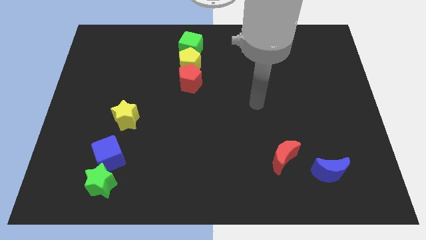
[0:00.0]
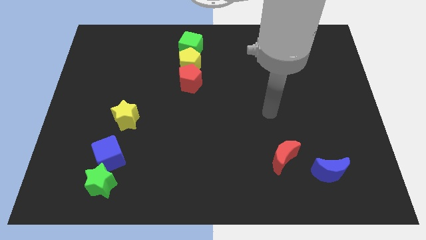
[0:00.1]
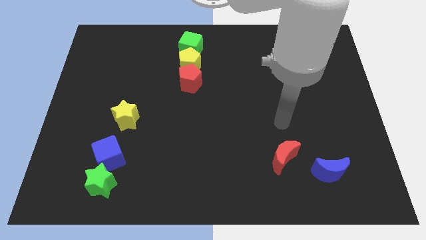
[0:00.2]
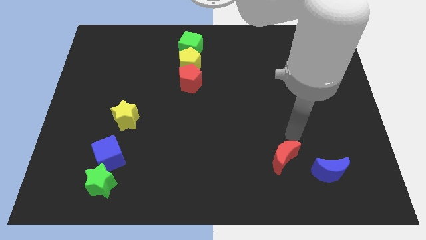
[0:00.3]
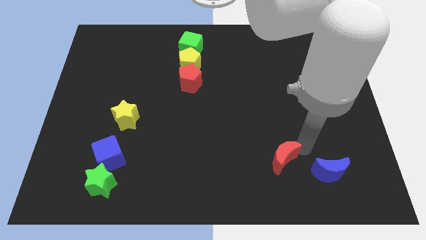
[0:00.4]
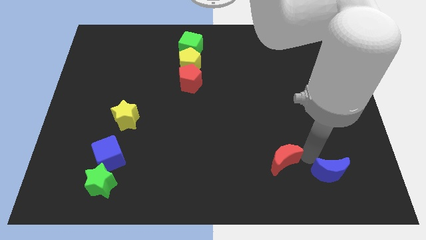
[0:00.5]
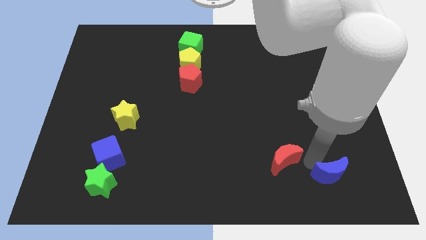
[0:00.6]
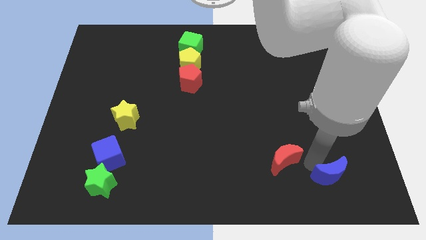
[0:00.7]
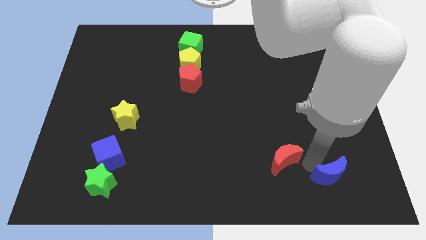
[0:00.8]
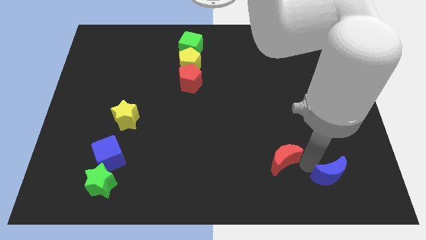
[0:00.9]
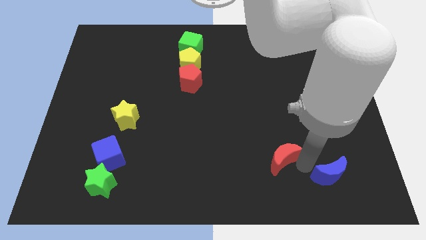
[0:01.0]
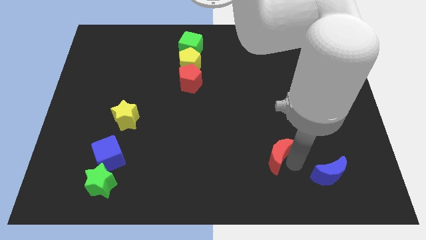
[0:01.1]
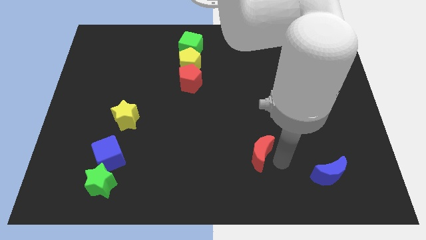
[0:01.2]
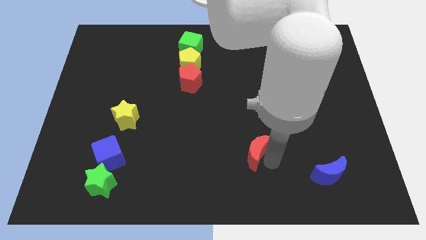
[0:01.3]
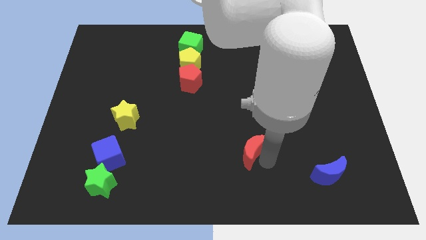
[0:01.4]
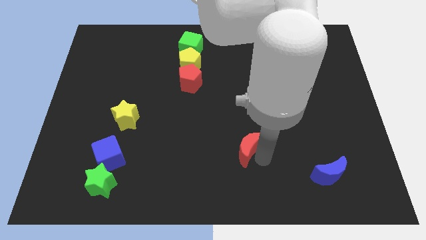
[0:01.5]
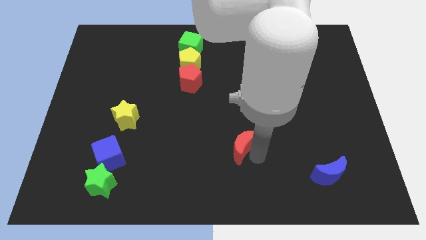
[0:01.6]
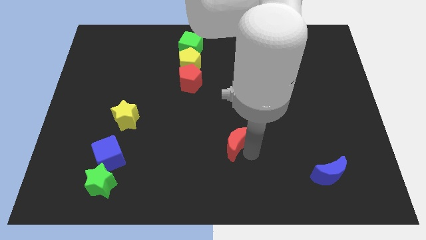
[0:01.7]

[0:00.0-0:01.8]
move red moon away from the blue moon

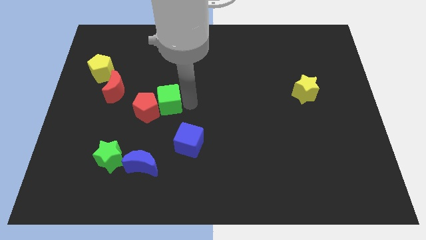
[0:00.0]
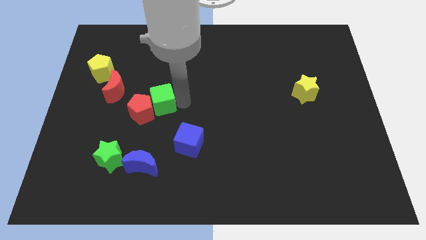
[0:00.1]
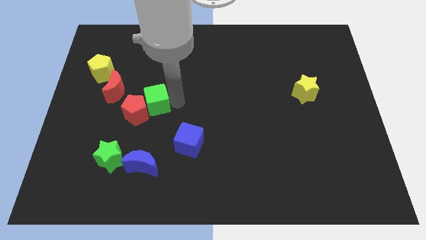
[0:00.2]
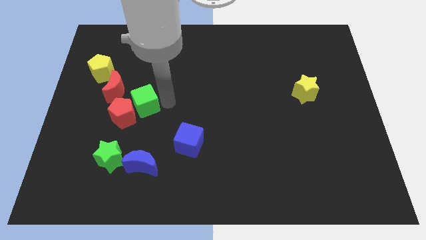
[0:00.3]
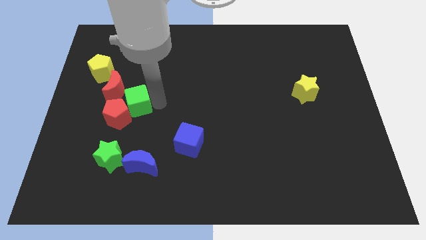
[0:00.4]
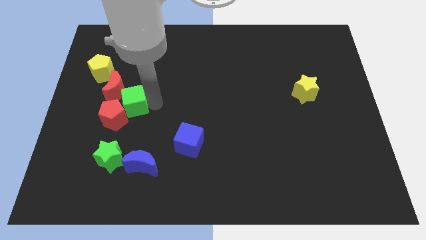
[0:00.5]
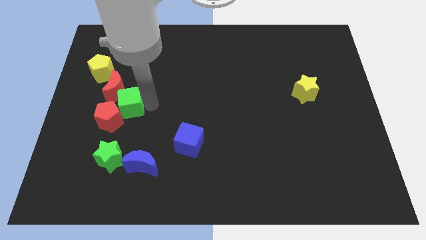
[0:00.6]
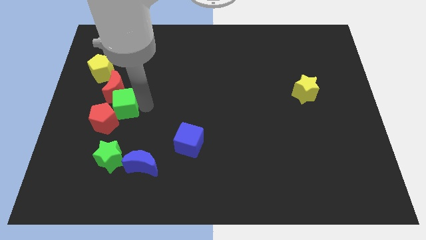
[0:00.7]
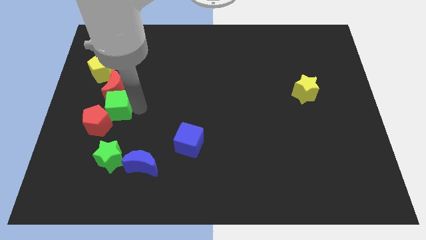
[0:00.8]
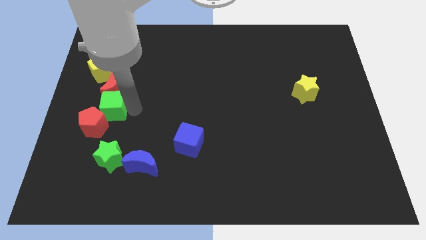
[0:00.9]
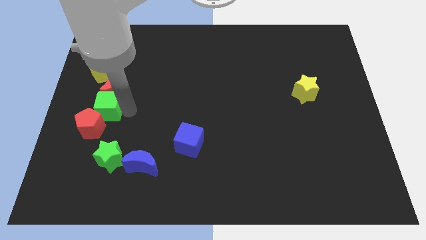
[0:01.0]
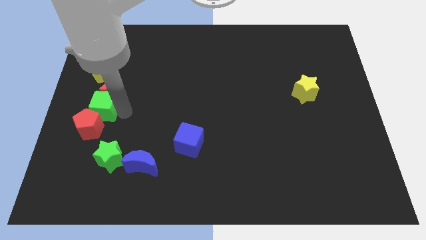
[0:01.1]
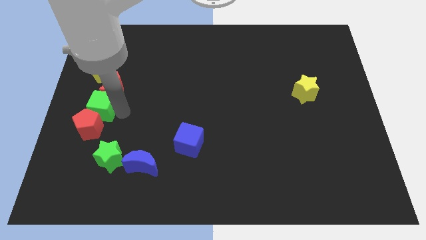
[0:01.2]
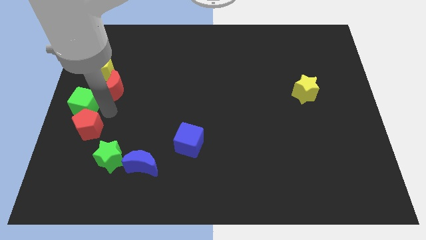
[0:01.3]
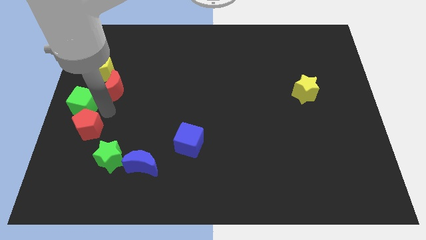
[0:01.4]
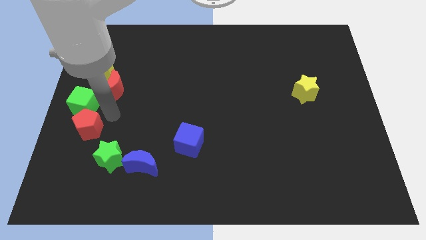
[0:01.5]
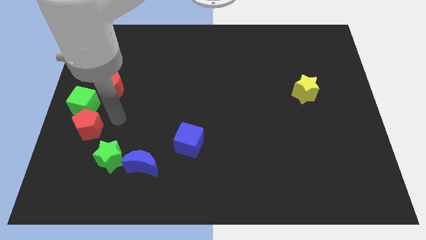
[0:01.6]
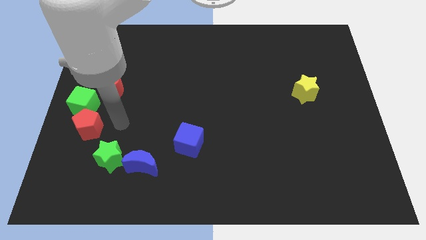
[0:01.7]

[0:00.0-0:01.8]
push the green cube along with red pentagon at left side of the board

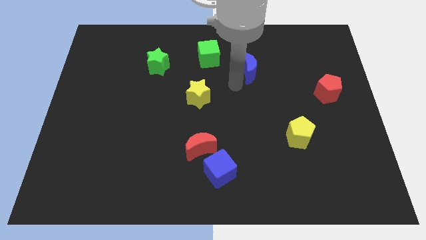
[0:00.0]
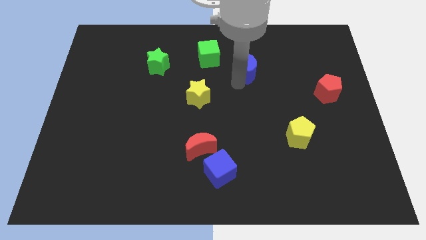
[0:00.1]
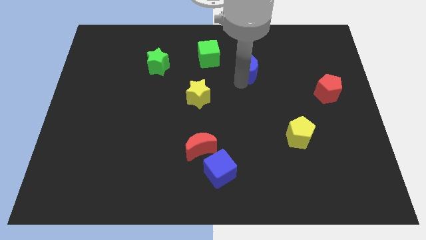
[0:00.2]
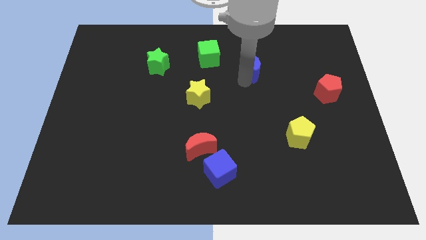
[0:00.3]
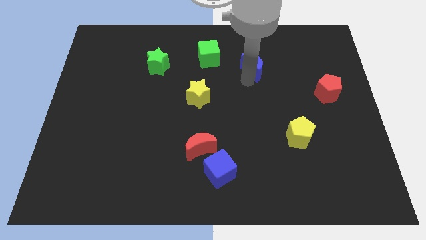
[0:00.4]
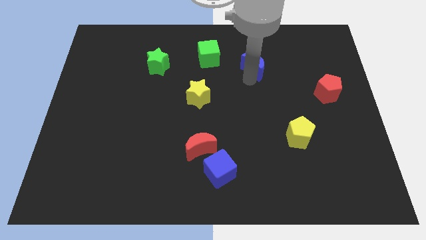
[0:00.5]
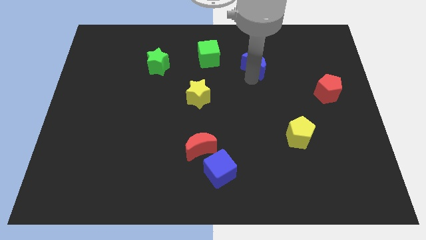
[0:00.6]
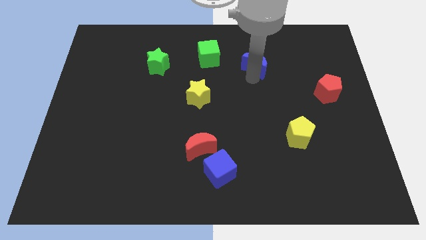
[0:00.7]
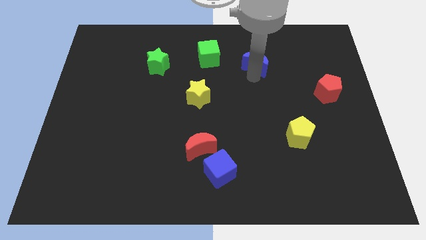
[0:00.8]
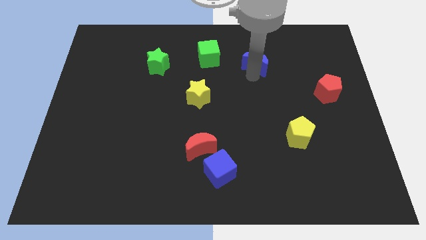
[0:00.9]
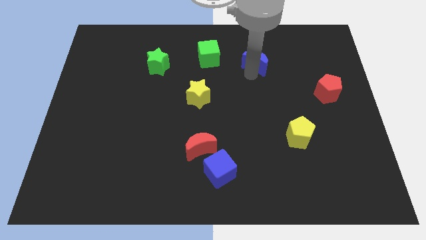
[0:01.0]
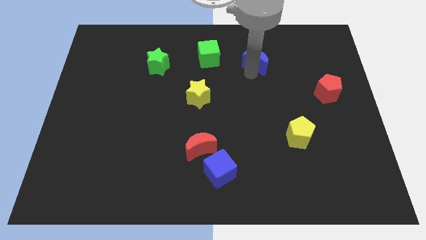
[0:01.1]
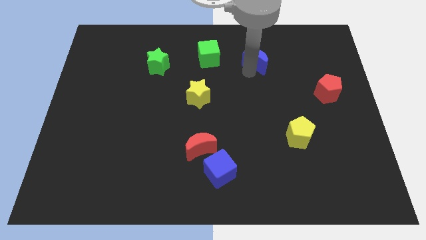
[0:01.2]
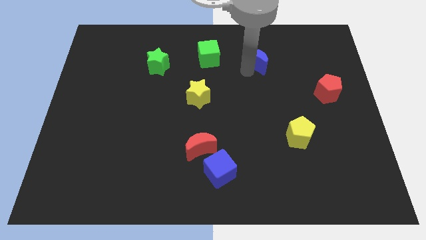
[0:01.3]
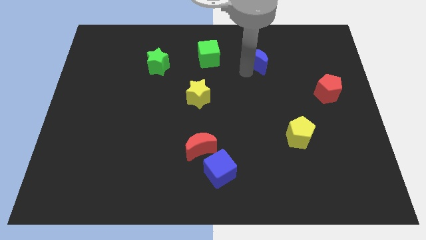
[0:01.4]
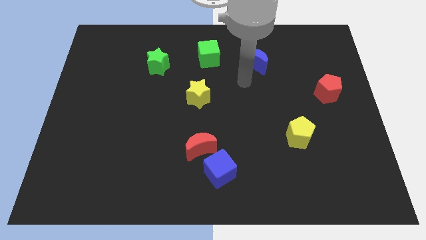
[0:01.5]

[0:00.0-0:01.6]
move the blue moon to the right of the green square

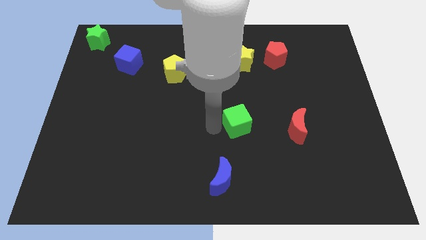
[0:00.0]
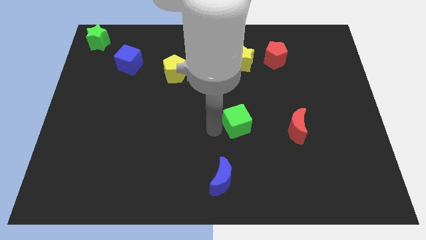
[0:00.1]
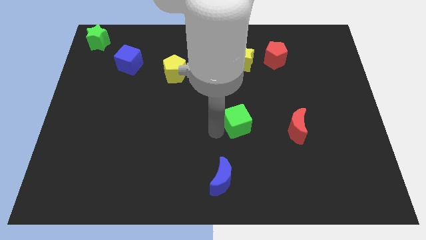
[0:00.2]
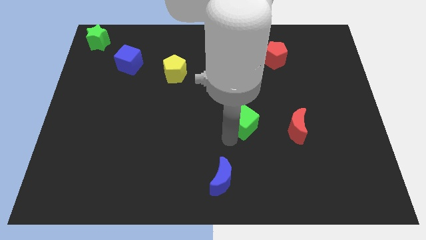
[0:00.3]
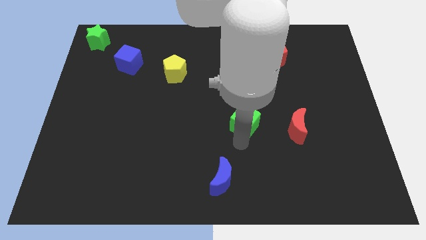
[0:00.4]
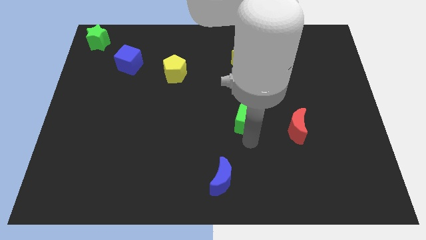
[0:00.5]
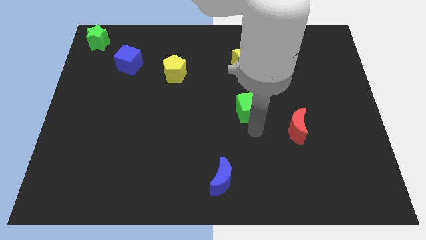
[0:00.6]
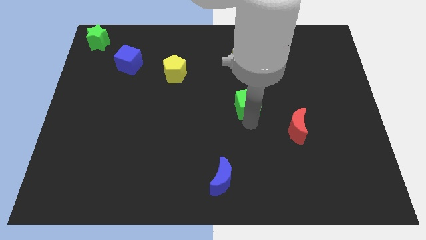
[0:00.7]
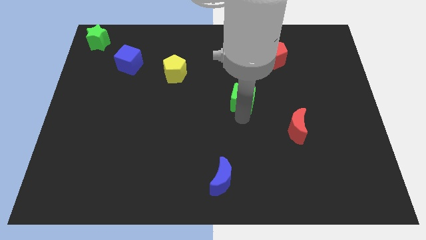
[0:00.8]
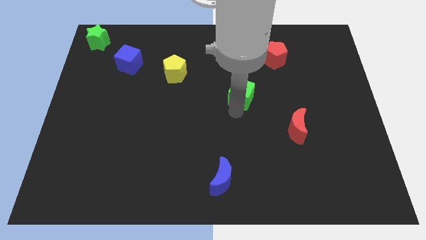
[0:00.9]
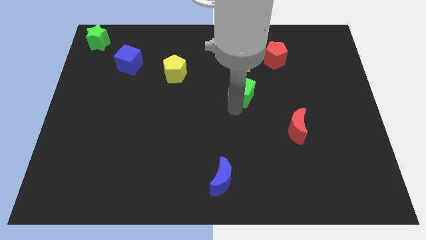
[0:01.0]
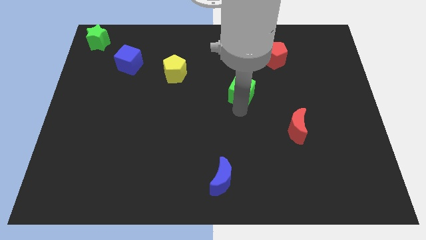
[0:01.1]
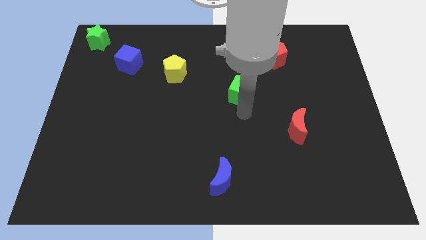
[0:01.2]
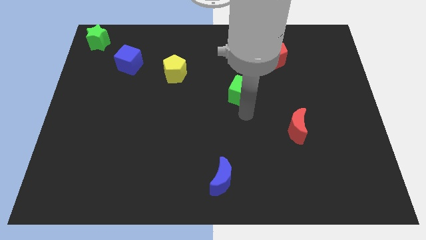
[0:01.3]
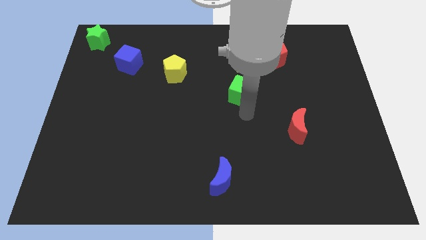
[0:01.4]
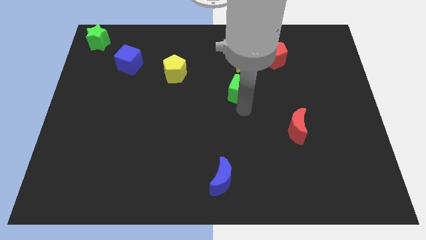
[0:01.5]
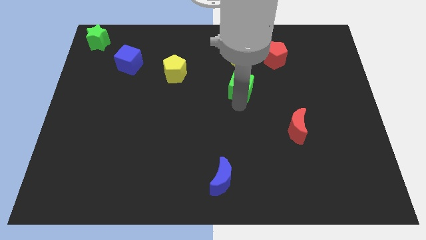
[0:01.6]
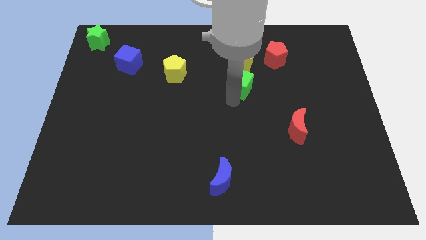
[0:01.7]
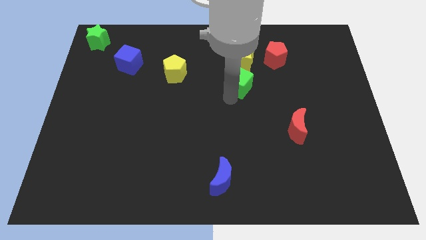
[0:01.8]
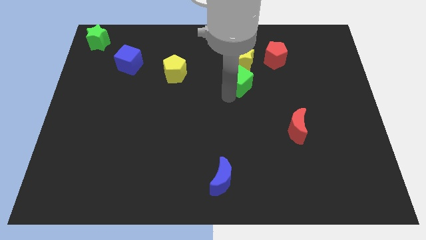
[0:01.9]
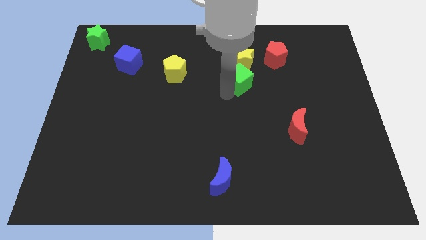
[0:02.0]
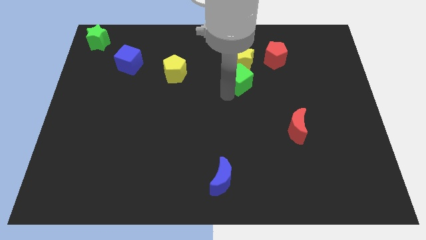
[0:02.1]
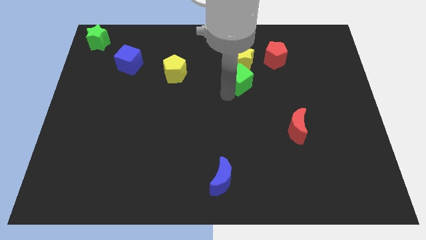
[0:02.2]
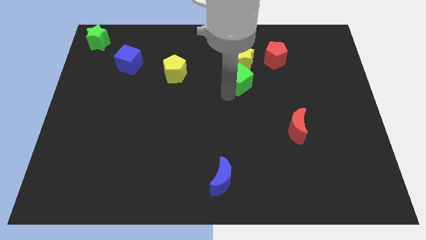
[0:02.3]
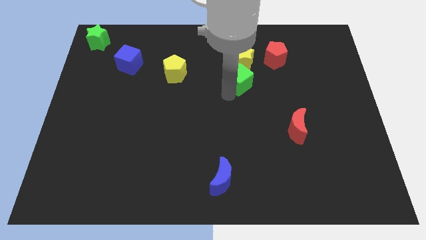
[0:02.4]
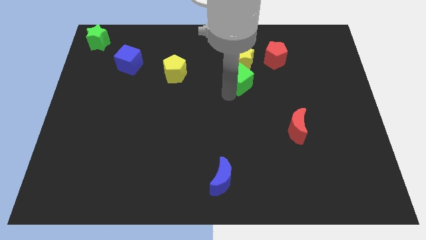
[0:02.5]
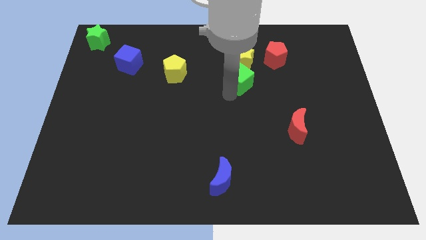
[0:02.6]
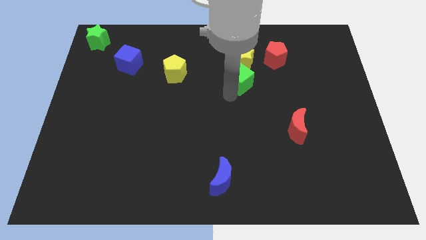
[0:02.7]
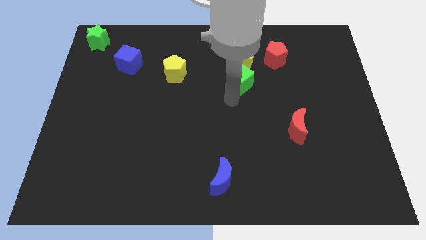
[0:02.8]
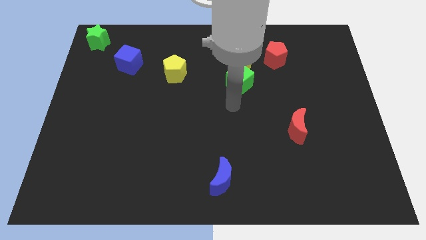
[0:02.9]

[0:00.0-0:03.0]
push the green cube to the bottom side of the yellow star

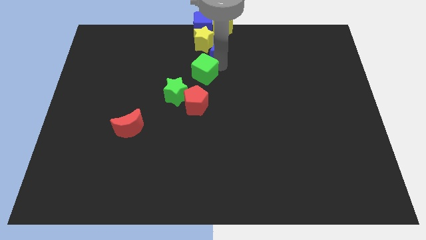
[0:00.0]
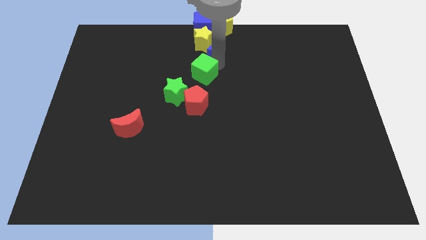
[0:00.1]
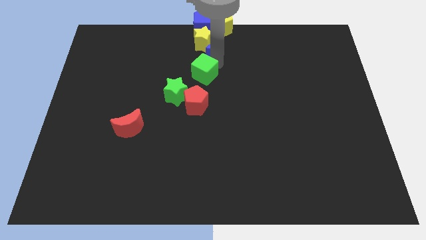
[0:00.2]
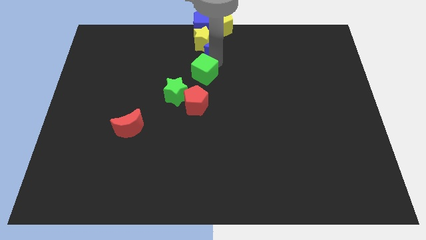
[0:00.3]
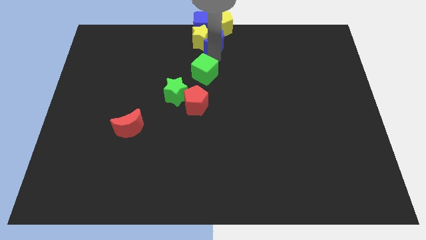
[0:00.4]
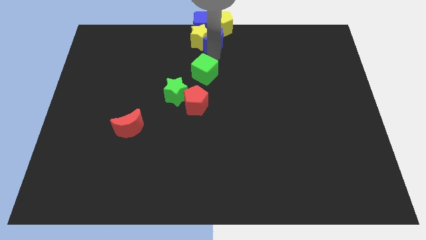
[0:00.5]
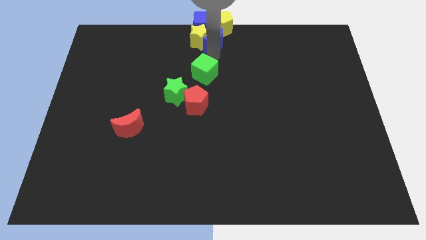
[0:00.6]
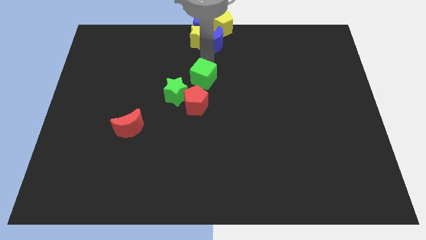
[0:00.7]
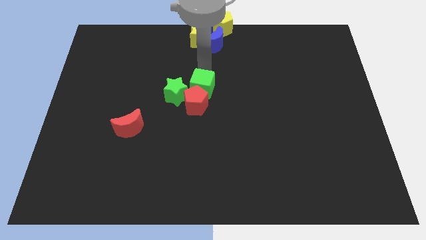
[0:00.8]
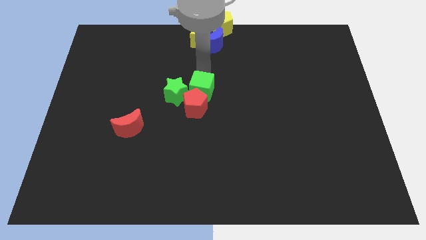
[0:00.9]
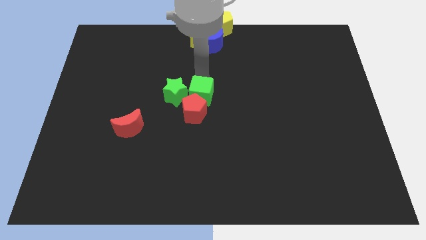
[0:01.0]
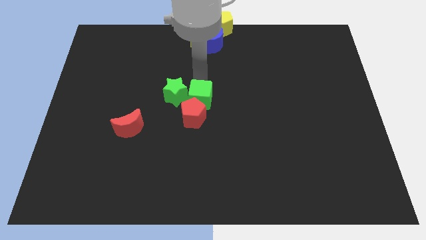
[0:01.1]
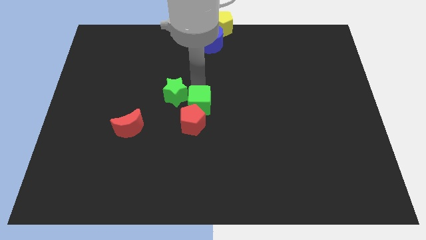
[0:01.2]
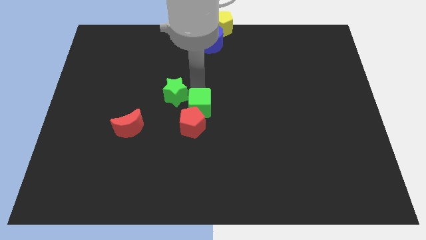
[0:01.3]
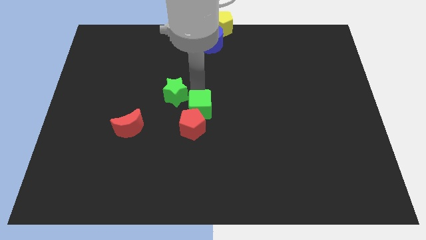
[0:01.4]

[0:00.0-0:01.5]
push the green cube on the top of the red pentagon
